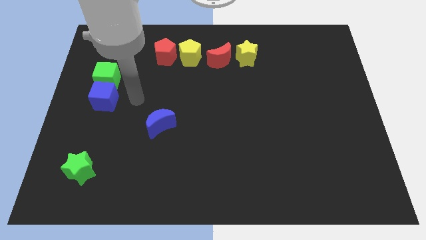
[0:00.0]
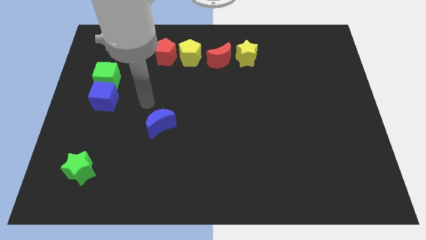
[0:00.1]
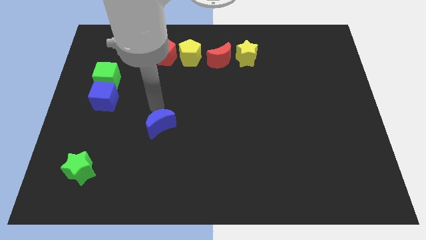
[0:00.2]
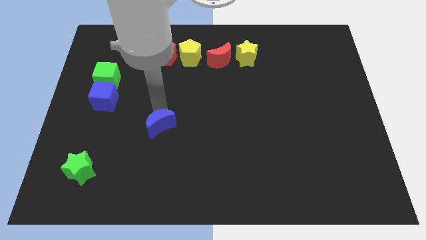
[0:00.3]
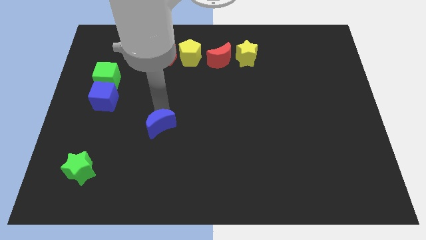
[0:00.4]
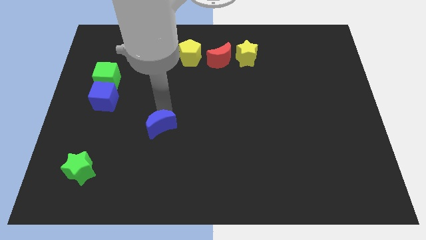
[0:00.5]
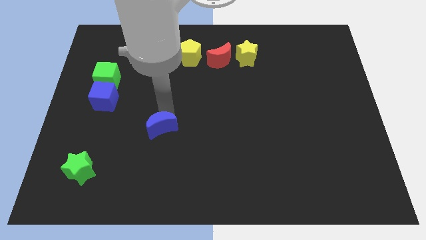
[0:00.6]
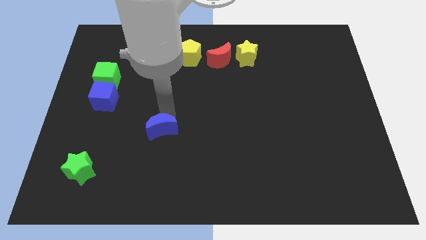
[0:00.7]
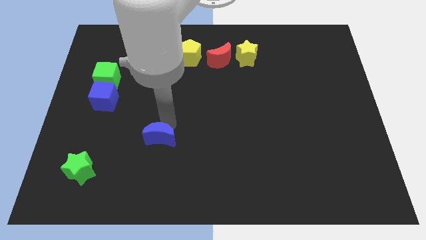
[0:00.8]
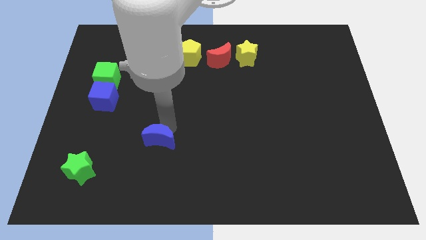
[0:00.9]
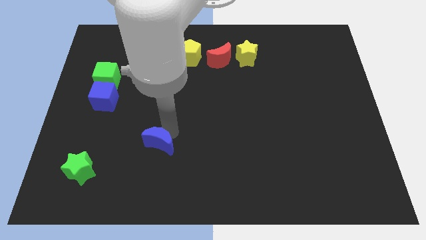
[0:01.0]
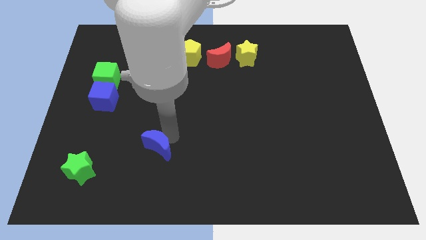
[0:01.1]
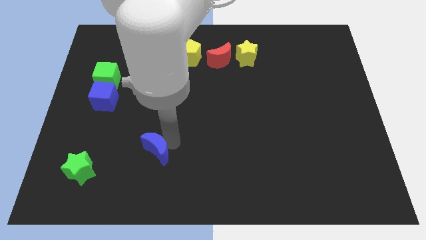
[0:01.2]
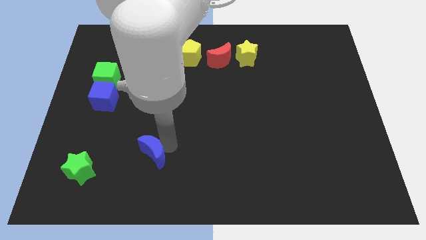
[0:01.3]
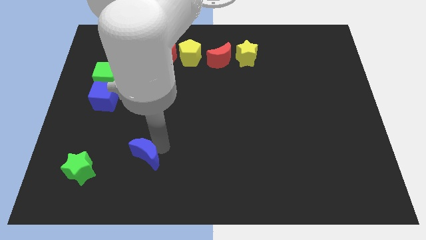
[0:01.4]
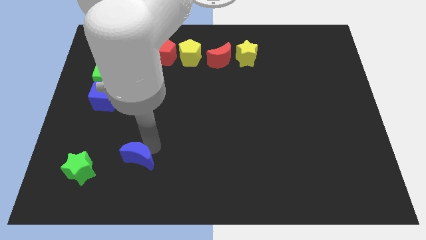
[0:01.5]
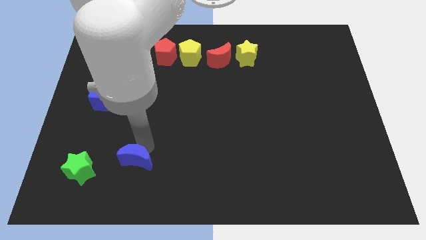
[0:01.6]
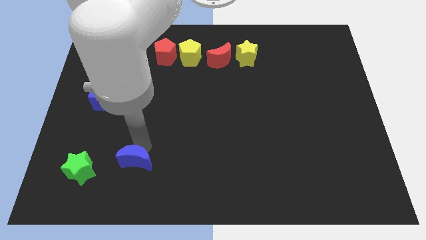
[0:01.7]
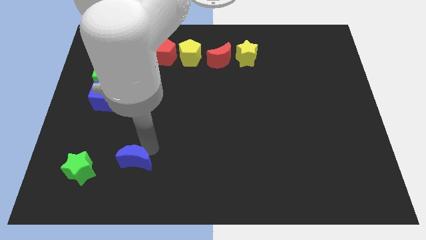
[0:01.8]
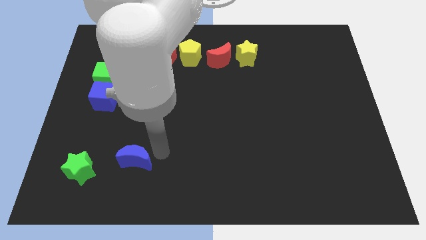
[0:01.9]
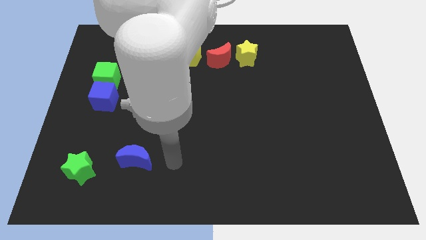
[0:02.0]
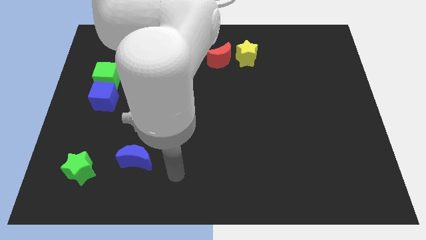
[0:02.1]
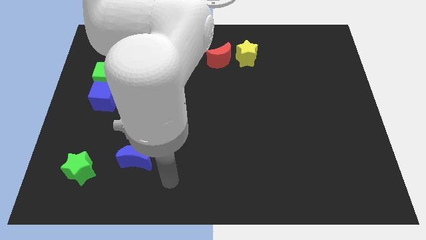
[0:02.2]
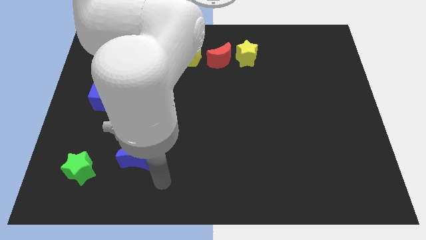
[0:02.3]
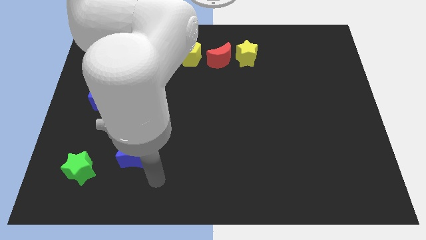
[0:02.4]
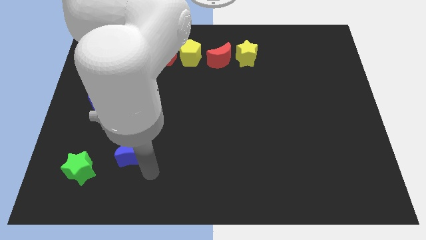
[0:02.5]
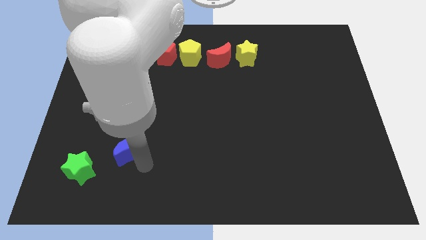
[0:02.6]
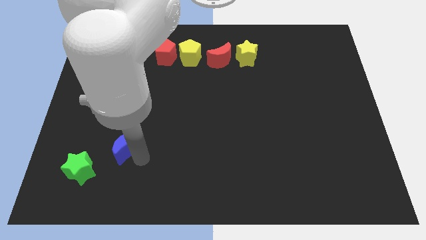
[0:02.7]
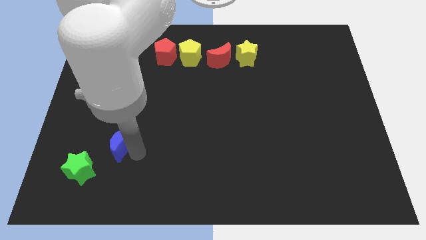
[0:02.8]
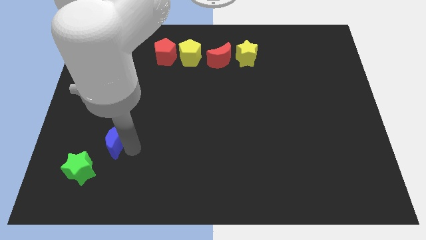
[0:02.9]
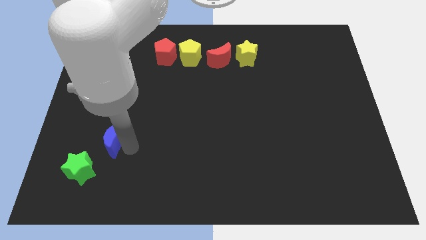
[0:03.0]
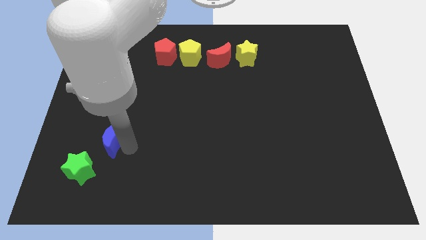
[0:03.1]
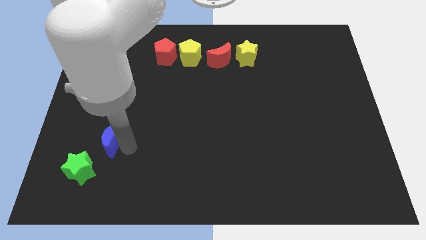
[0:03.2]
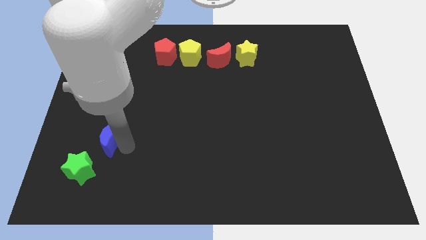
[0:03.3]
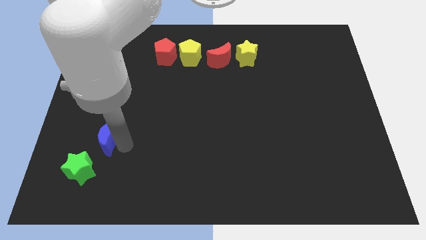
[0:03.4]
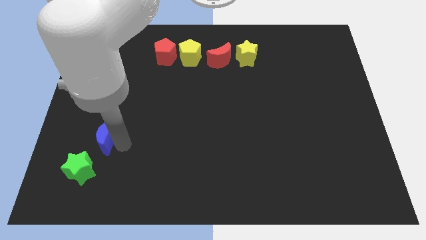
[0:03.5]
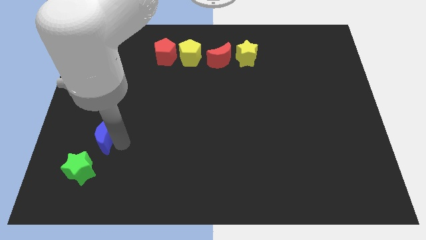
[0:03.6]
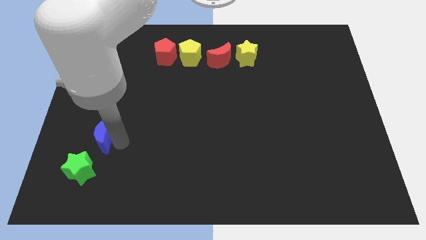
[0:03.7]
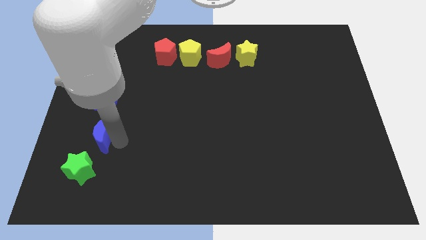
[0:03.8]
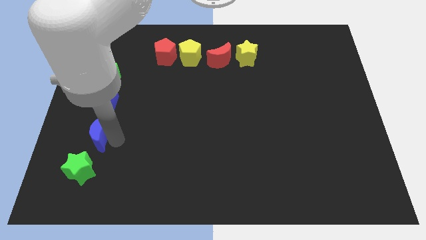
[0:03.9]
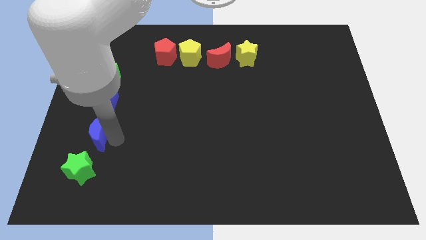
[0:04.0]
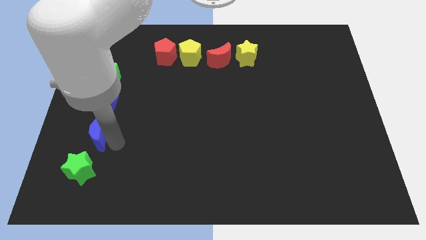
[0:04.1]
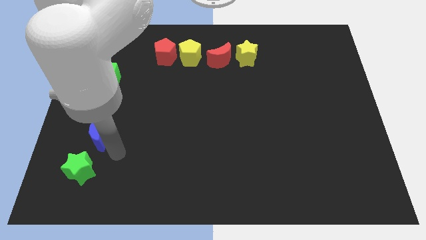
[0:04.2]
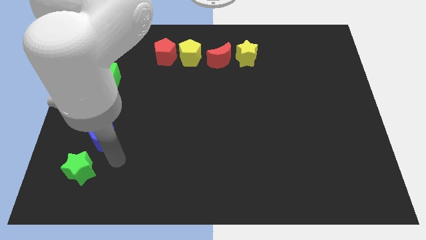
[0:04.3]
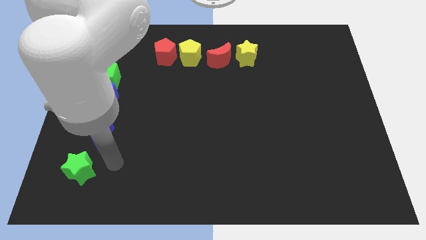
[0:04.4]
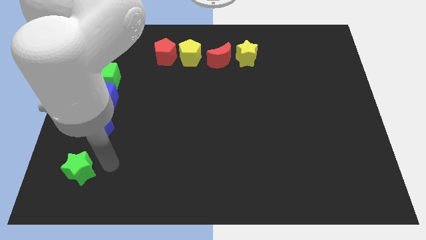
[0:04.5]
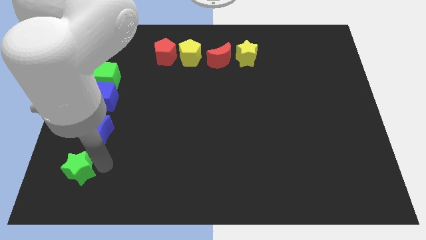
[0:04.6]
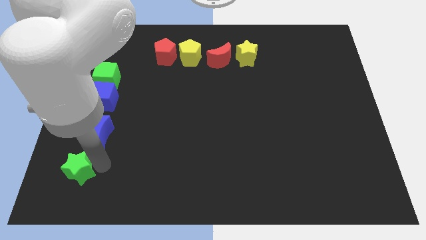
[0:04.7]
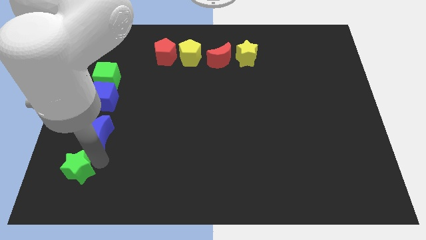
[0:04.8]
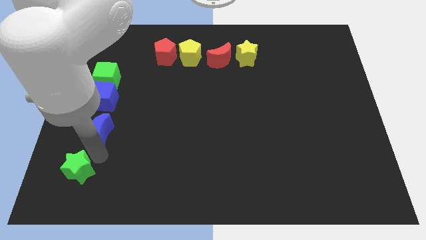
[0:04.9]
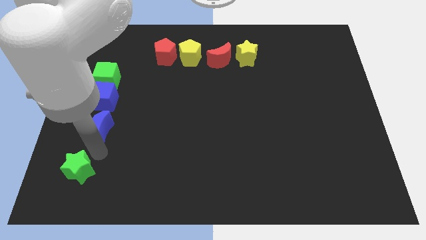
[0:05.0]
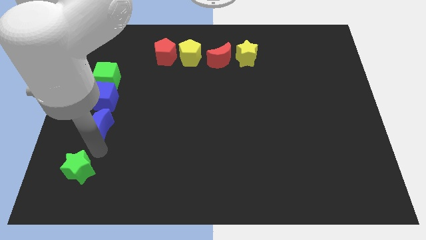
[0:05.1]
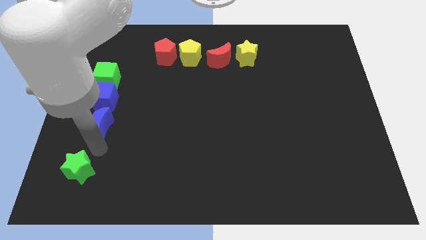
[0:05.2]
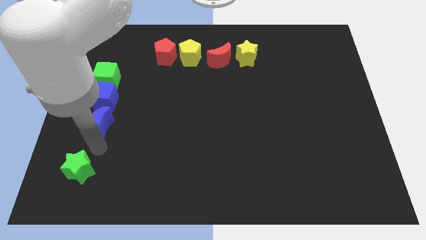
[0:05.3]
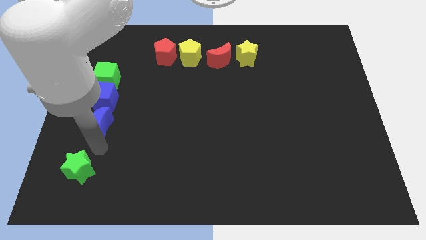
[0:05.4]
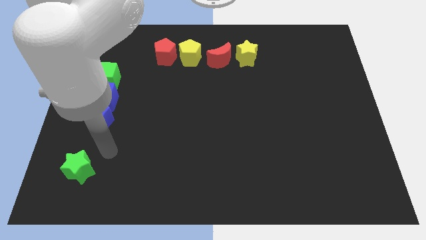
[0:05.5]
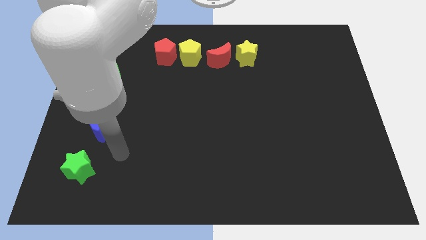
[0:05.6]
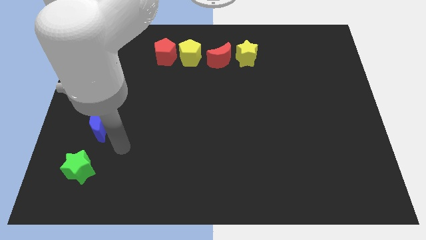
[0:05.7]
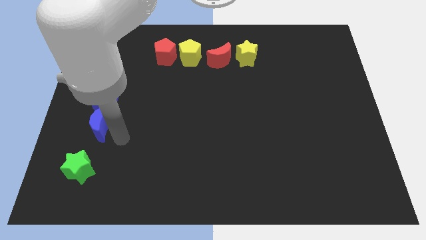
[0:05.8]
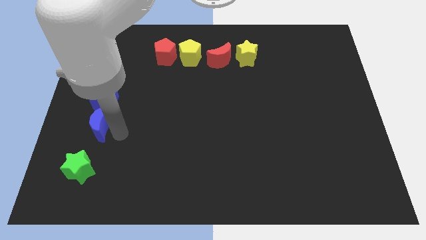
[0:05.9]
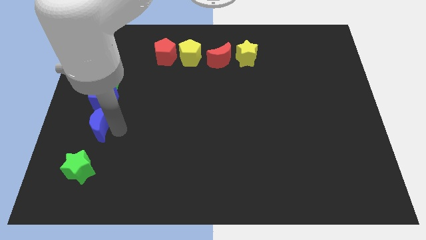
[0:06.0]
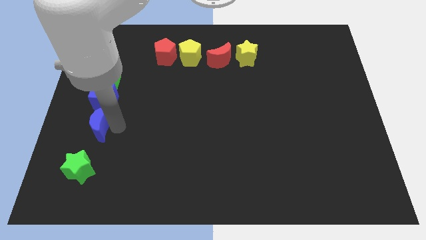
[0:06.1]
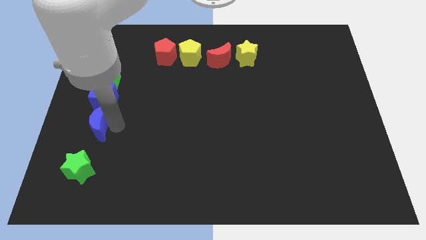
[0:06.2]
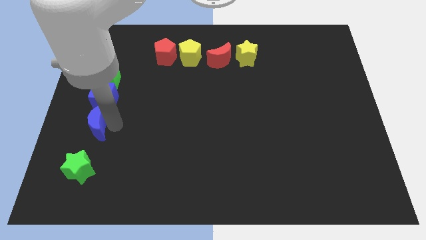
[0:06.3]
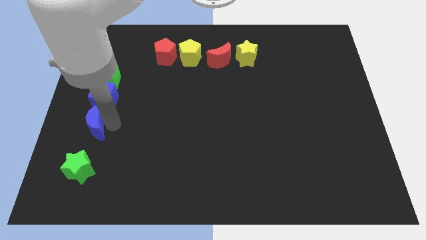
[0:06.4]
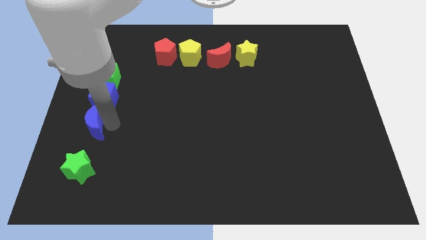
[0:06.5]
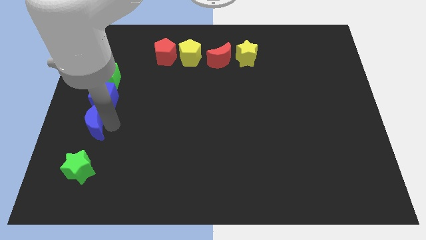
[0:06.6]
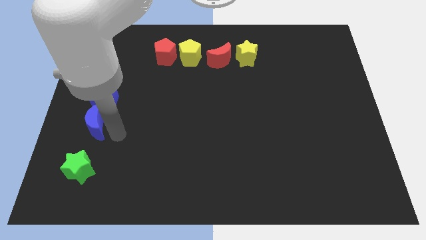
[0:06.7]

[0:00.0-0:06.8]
place the blue crescent bottom side of the blue cube

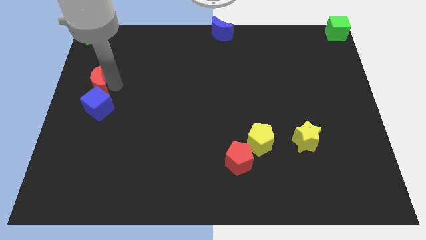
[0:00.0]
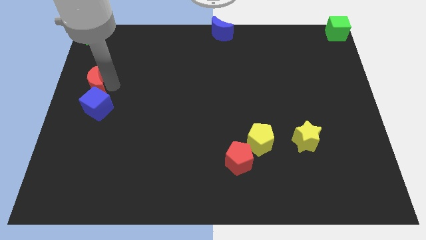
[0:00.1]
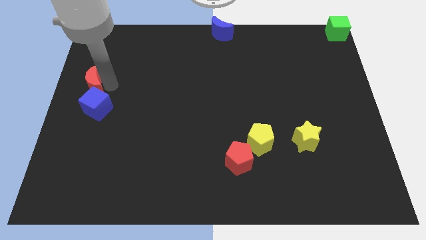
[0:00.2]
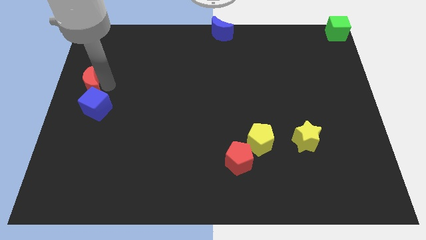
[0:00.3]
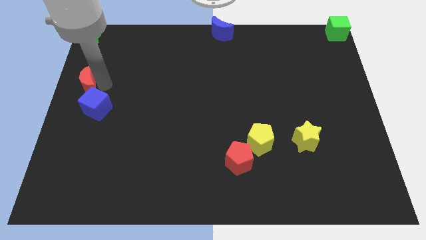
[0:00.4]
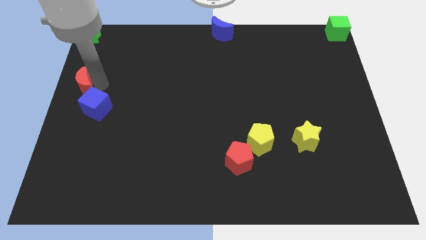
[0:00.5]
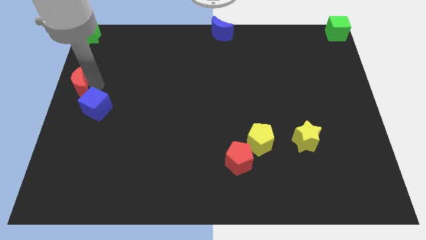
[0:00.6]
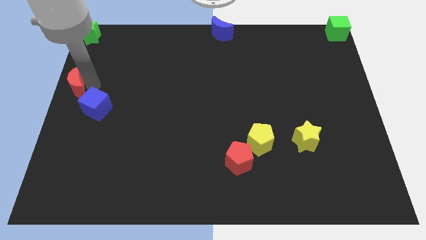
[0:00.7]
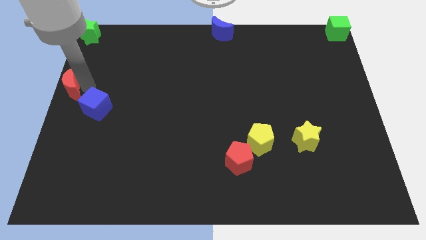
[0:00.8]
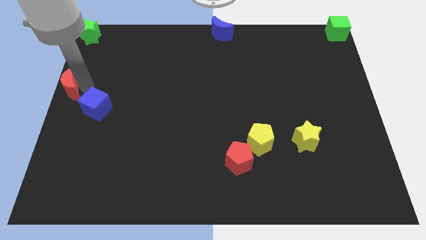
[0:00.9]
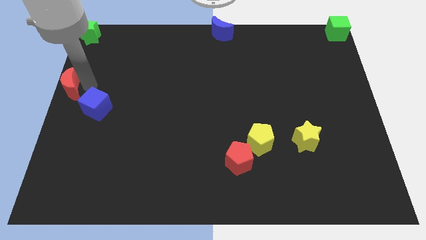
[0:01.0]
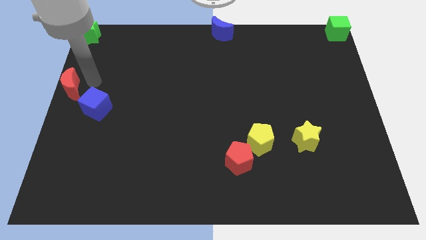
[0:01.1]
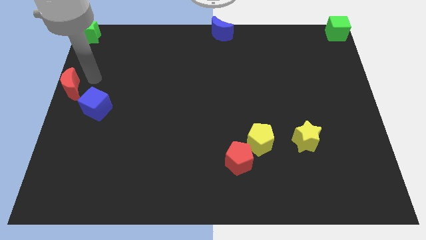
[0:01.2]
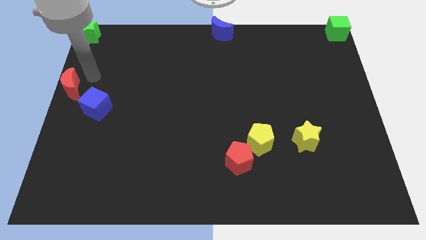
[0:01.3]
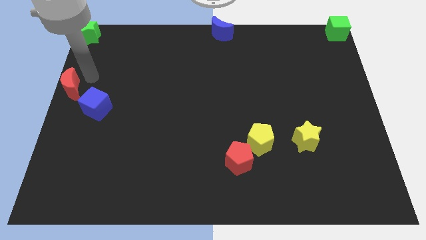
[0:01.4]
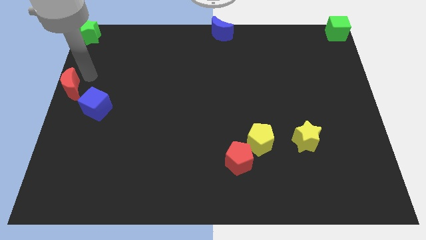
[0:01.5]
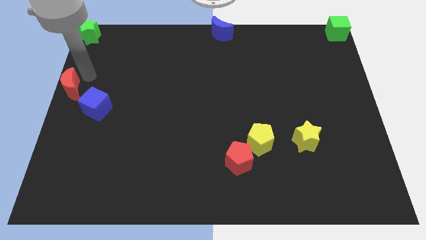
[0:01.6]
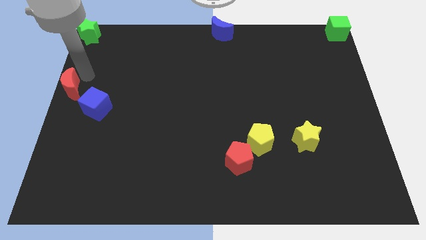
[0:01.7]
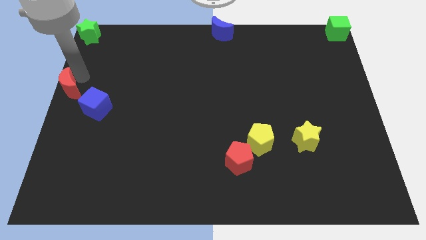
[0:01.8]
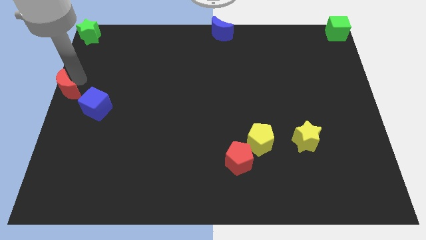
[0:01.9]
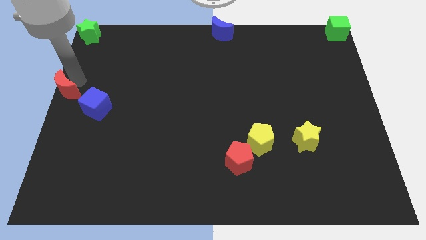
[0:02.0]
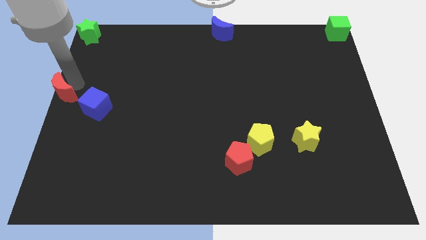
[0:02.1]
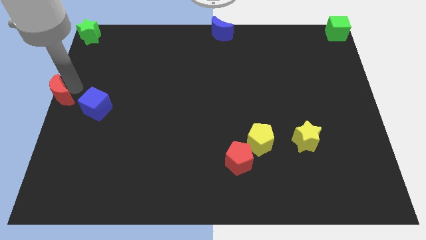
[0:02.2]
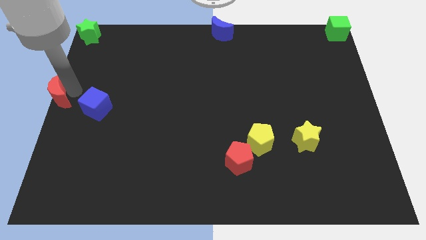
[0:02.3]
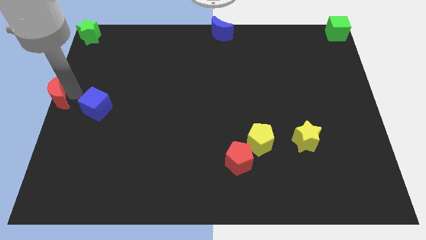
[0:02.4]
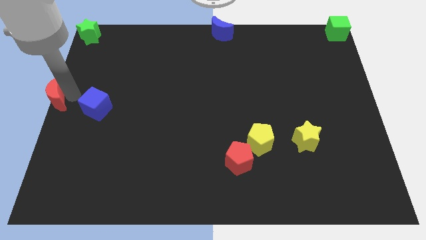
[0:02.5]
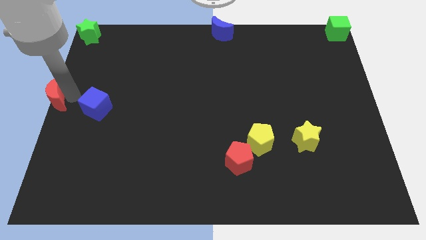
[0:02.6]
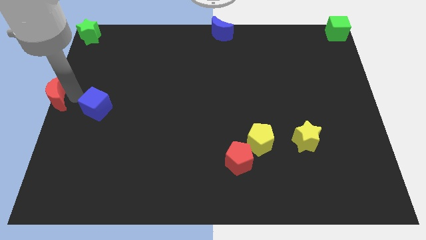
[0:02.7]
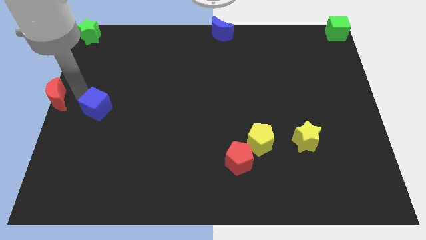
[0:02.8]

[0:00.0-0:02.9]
put the red moon at the center left side of the board
